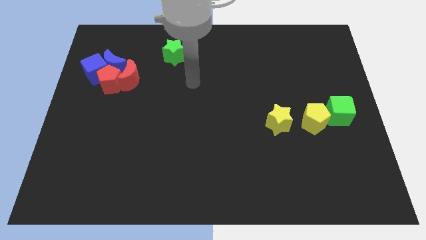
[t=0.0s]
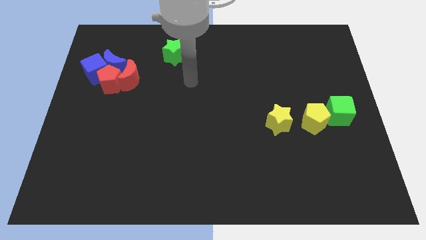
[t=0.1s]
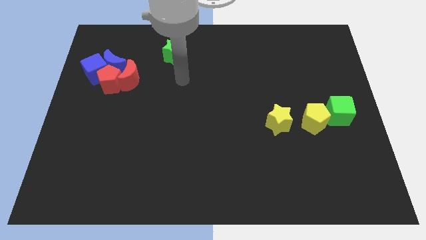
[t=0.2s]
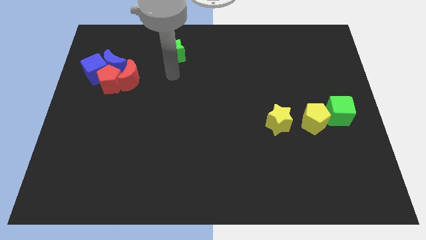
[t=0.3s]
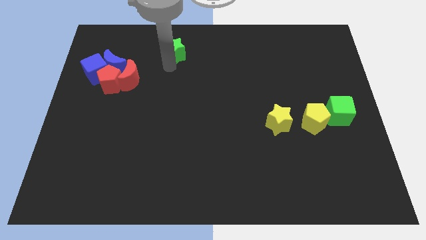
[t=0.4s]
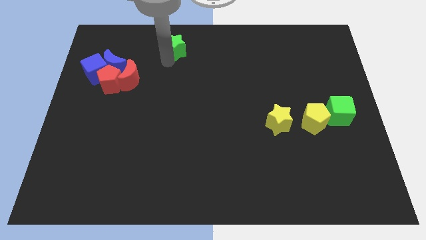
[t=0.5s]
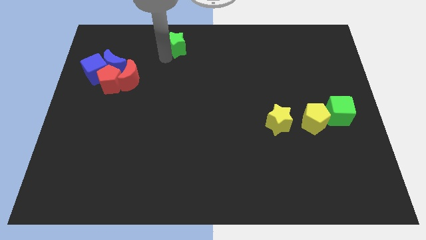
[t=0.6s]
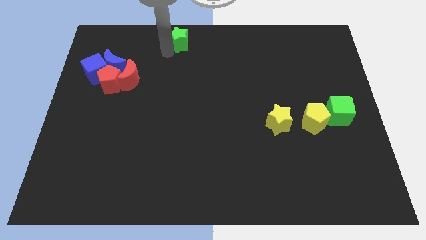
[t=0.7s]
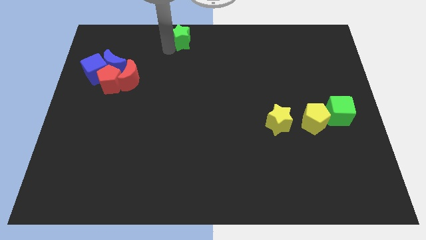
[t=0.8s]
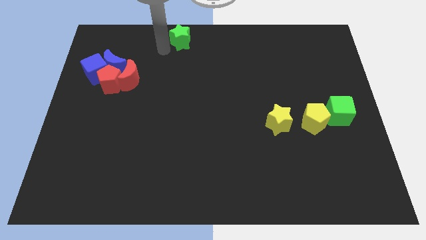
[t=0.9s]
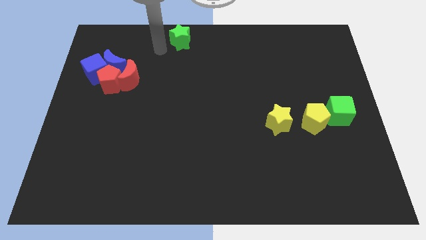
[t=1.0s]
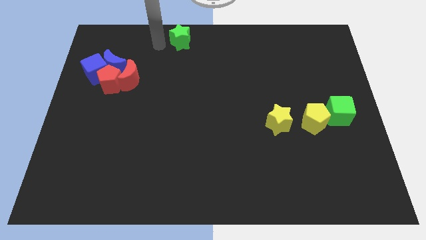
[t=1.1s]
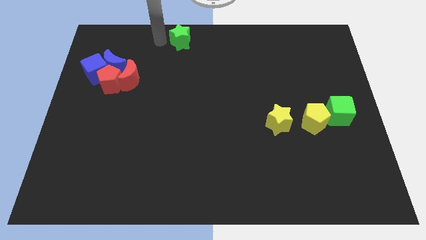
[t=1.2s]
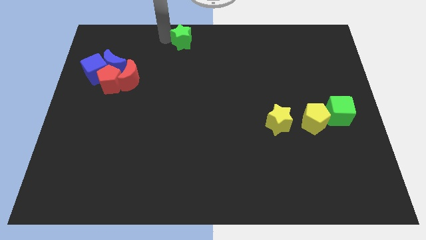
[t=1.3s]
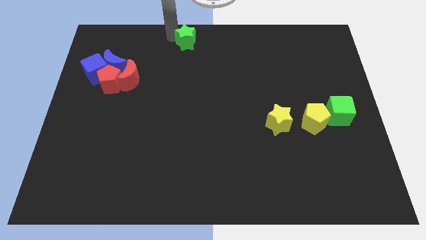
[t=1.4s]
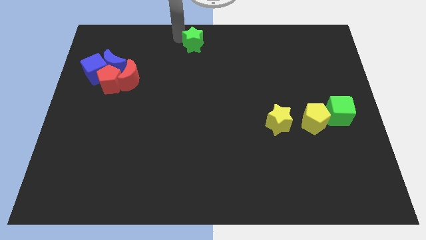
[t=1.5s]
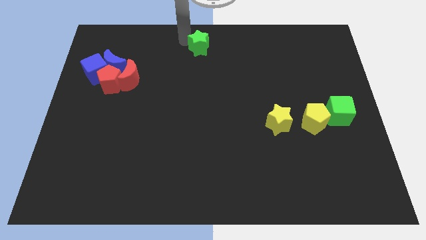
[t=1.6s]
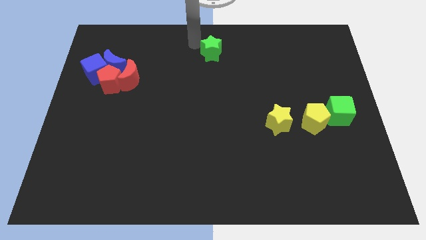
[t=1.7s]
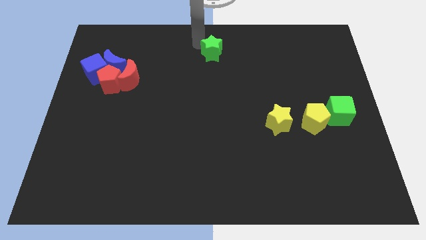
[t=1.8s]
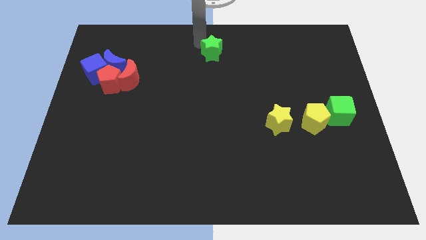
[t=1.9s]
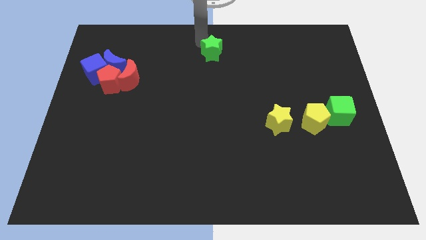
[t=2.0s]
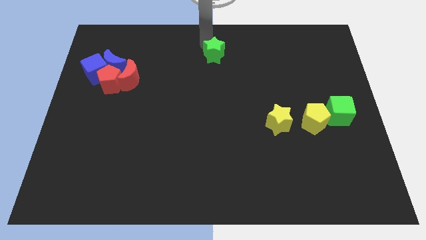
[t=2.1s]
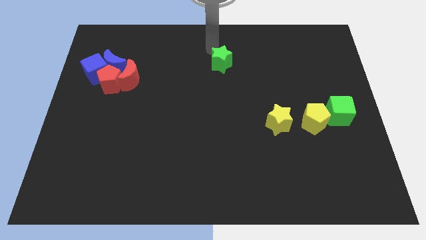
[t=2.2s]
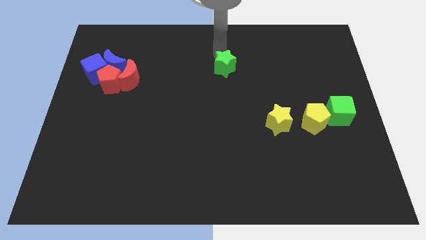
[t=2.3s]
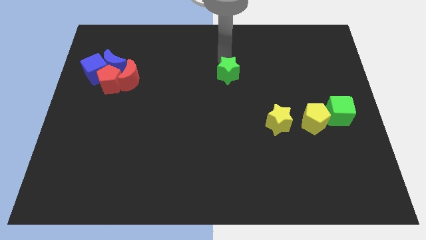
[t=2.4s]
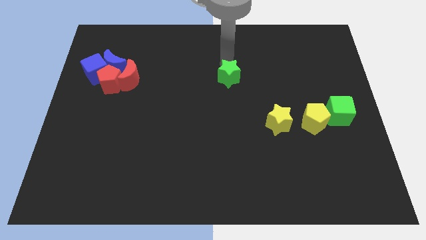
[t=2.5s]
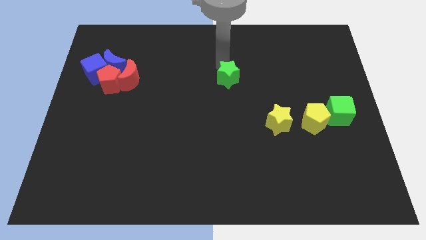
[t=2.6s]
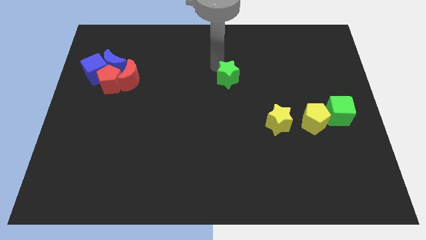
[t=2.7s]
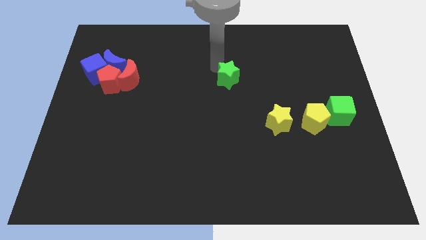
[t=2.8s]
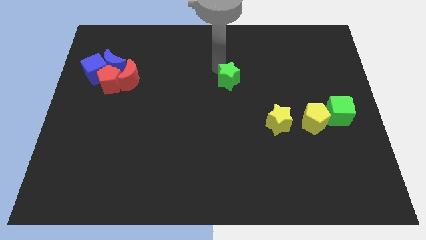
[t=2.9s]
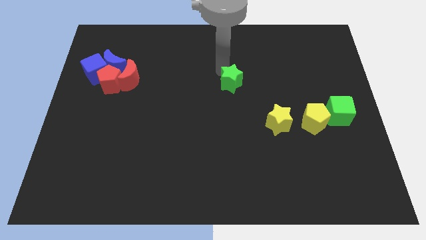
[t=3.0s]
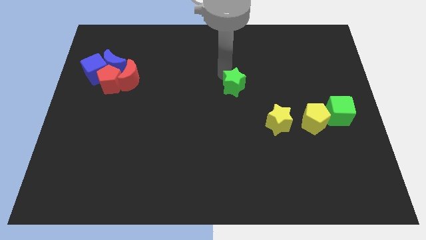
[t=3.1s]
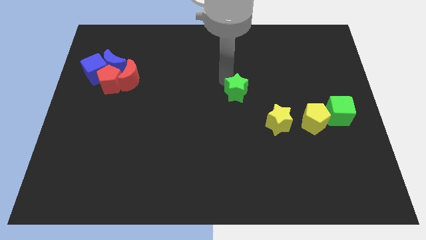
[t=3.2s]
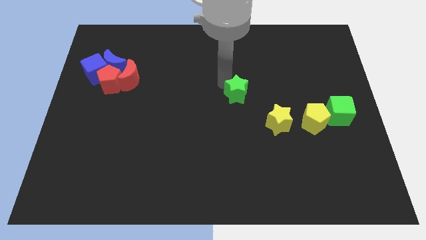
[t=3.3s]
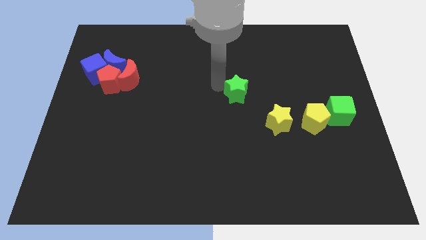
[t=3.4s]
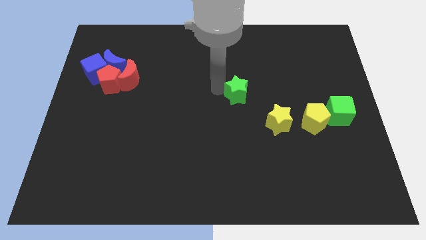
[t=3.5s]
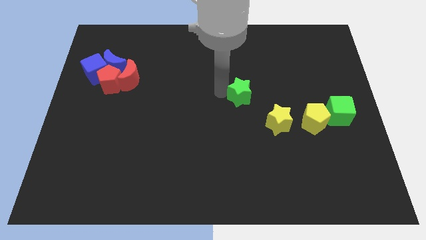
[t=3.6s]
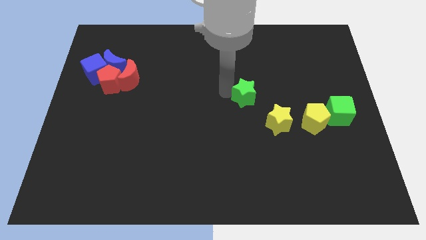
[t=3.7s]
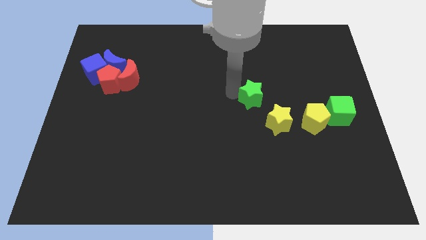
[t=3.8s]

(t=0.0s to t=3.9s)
move the green star to the top left of the yellow star

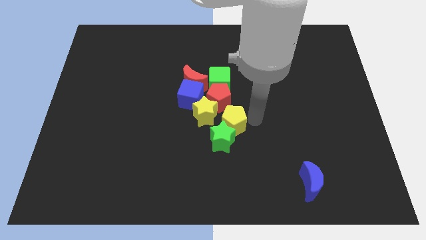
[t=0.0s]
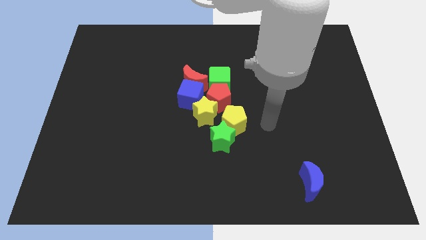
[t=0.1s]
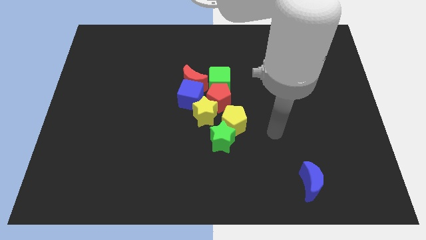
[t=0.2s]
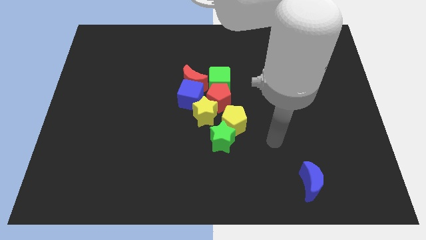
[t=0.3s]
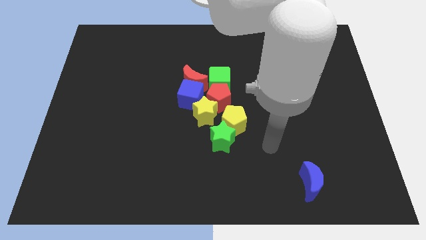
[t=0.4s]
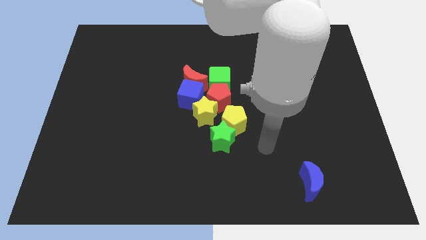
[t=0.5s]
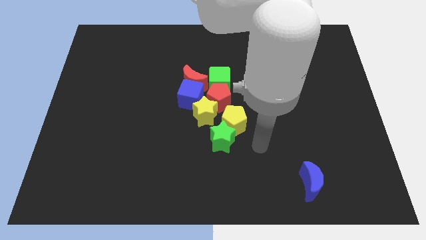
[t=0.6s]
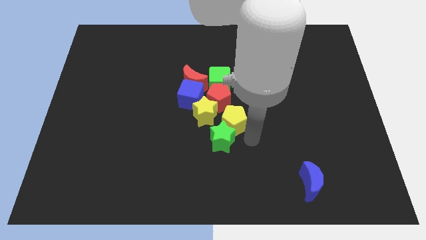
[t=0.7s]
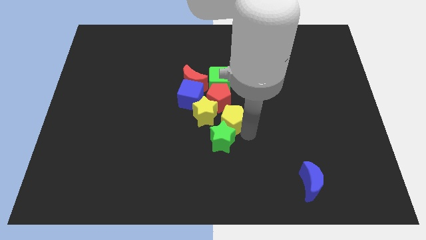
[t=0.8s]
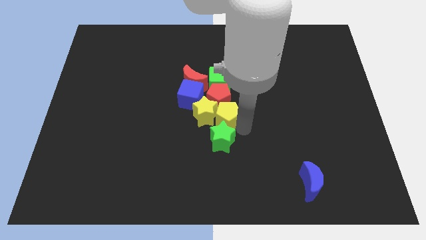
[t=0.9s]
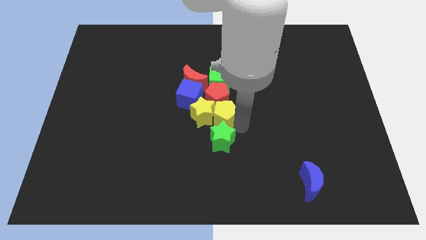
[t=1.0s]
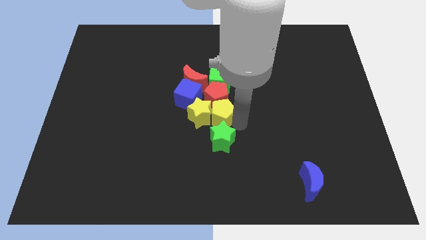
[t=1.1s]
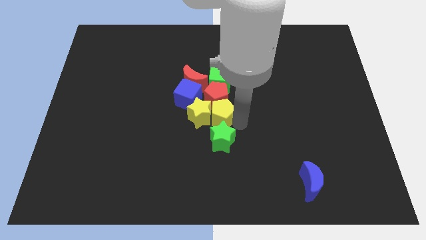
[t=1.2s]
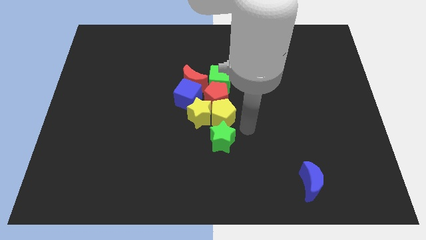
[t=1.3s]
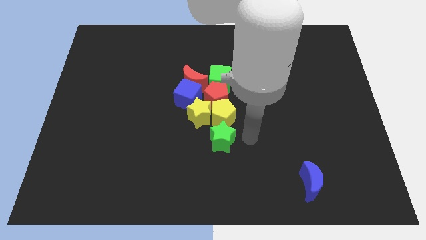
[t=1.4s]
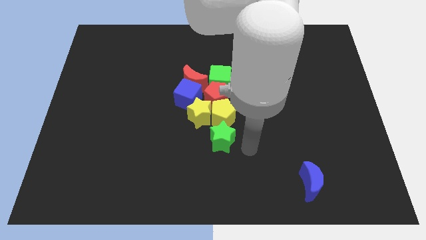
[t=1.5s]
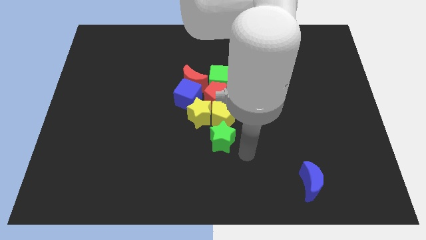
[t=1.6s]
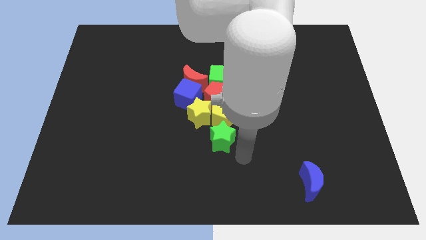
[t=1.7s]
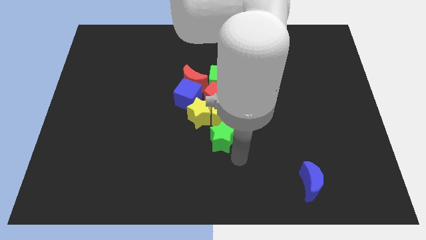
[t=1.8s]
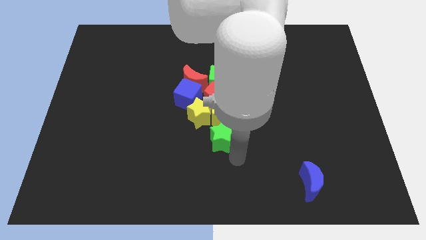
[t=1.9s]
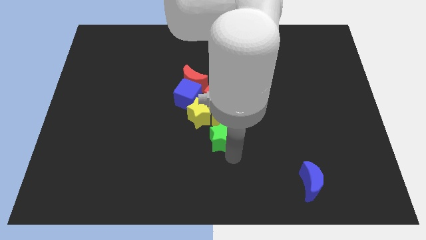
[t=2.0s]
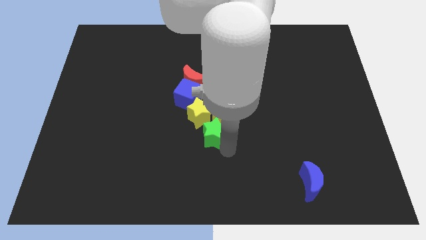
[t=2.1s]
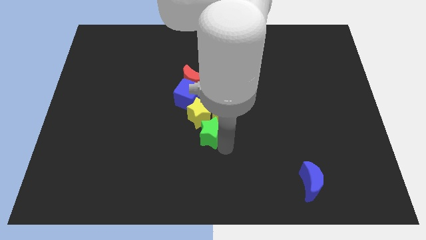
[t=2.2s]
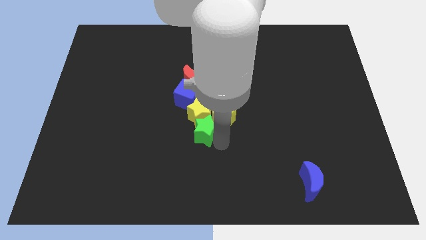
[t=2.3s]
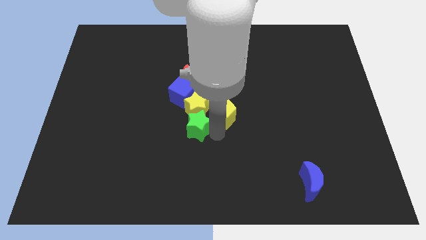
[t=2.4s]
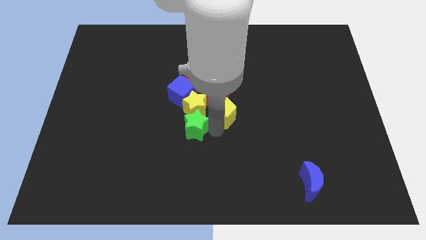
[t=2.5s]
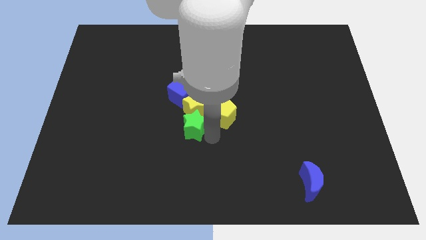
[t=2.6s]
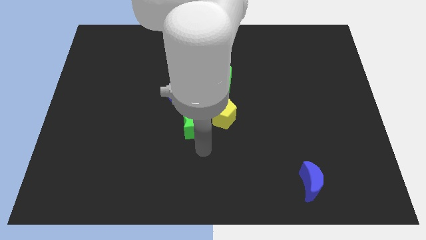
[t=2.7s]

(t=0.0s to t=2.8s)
push the green star into the yellow star

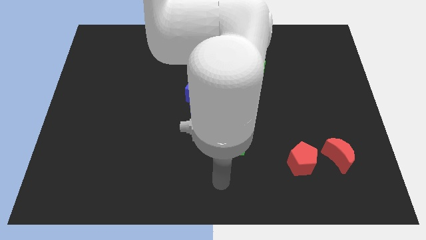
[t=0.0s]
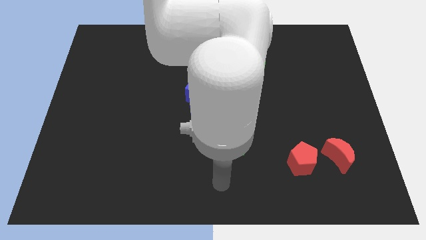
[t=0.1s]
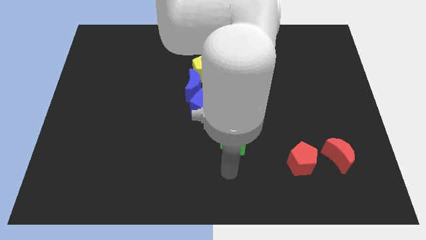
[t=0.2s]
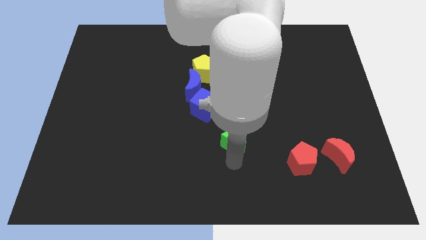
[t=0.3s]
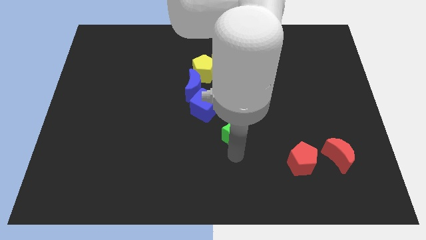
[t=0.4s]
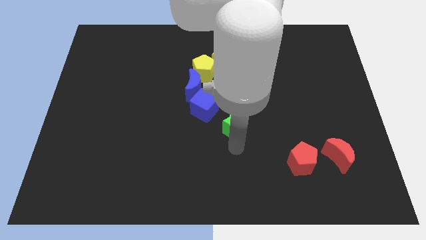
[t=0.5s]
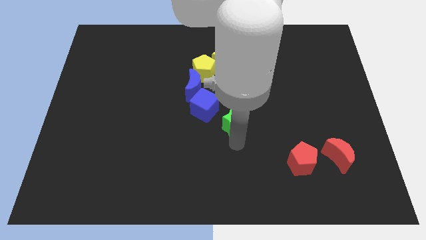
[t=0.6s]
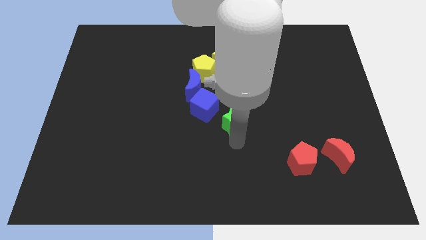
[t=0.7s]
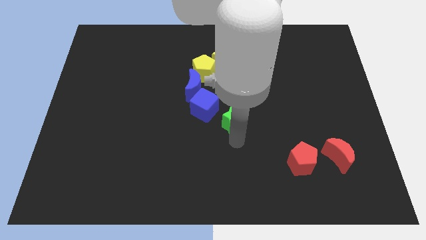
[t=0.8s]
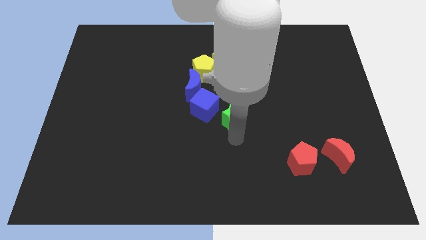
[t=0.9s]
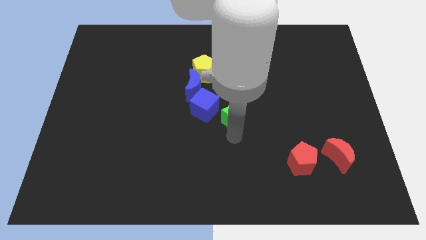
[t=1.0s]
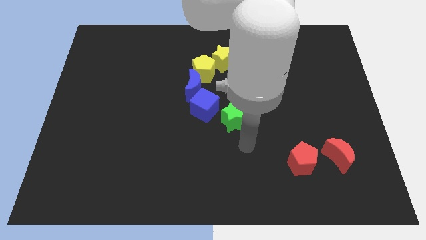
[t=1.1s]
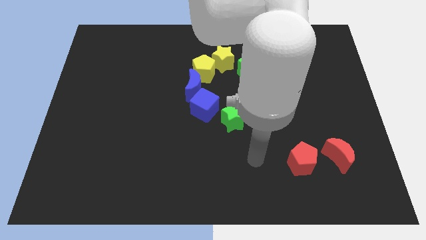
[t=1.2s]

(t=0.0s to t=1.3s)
slightly push the green star towards the center of the board

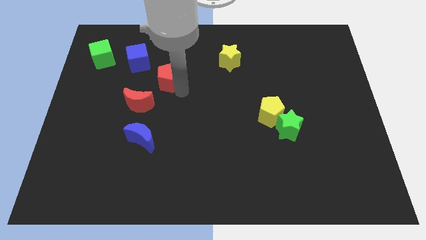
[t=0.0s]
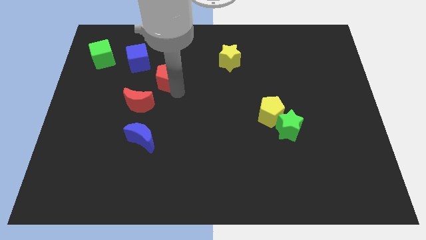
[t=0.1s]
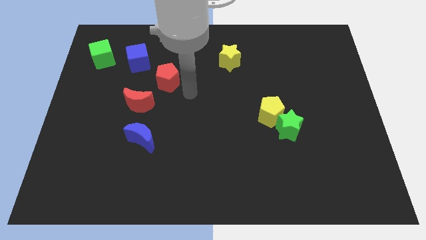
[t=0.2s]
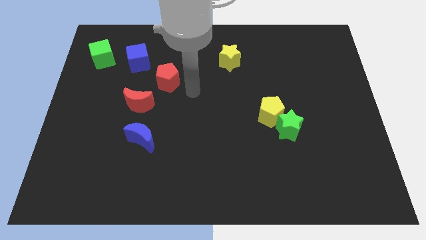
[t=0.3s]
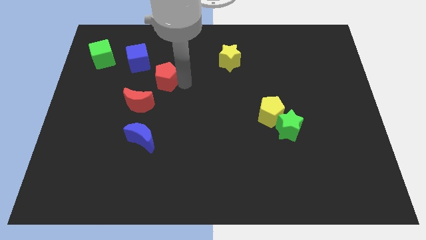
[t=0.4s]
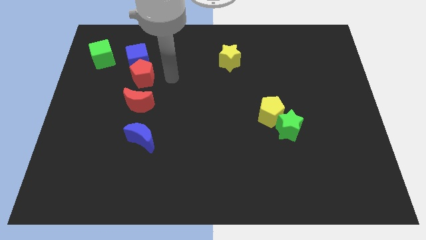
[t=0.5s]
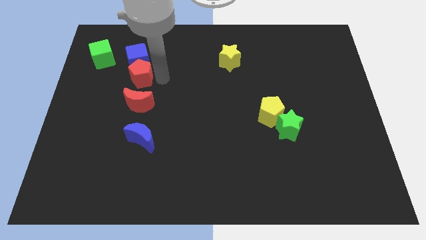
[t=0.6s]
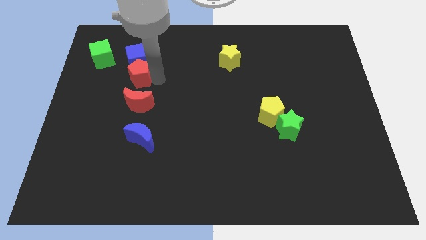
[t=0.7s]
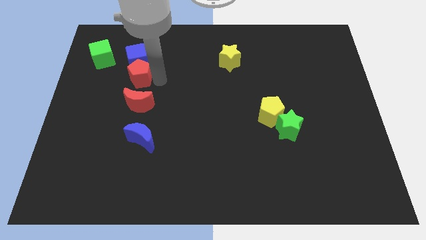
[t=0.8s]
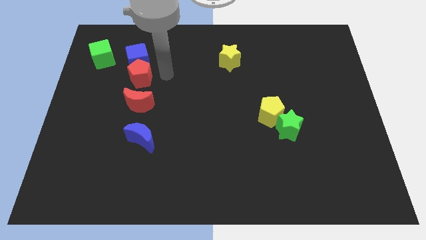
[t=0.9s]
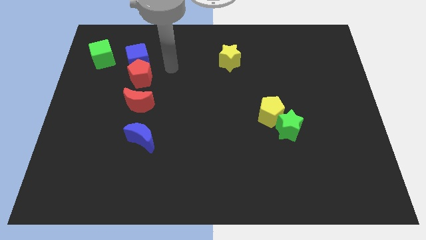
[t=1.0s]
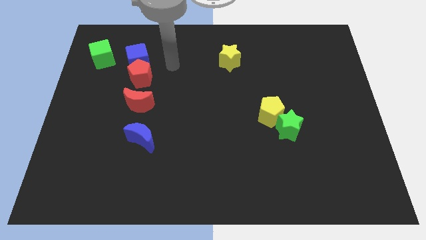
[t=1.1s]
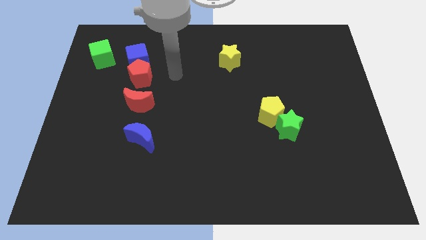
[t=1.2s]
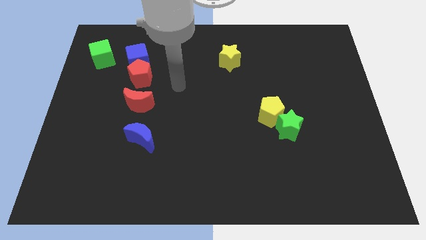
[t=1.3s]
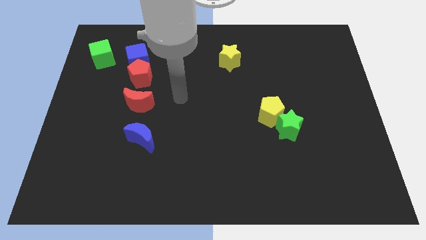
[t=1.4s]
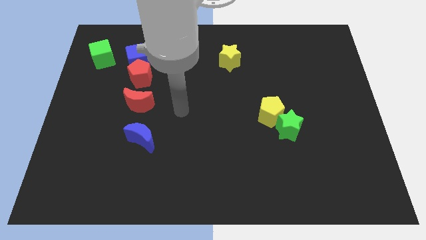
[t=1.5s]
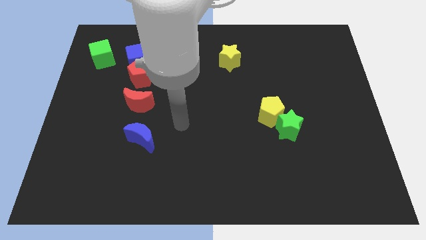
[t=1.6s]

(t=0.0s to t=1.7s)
push the red pentagon in between red crescent and blue cube
